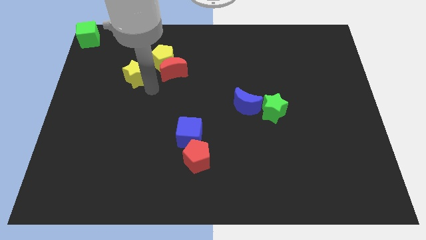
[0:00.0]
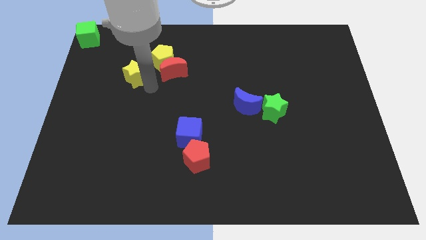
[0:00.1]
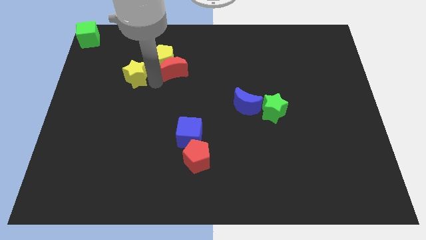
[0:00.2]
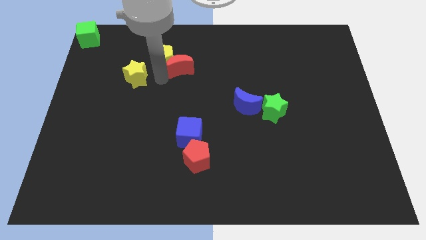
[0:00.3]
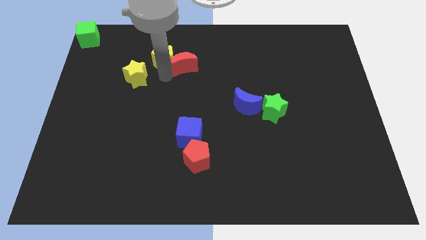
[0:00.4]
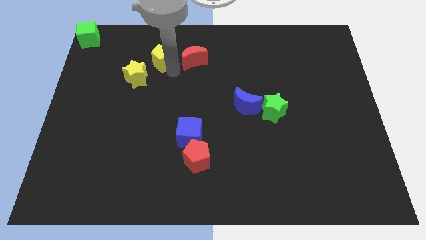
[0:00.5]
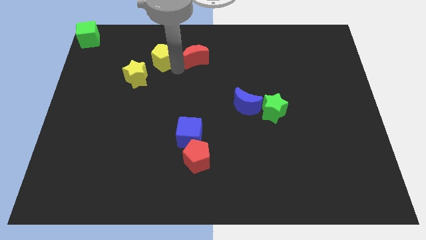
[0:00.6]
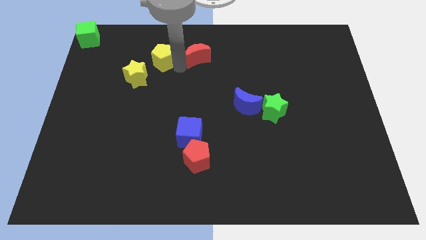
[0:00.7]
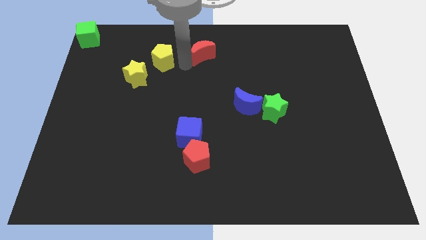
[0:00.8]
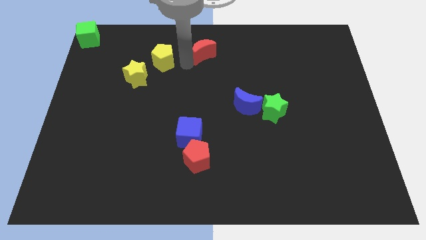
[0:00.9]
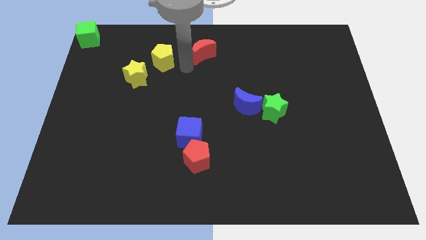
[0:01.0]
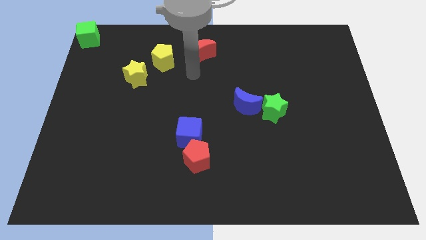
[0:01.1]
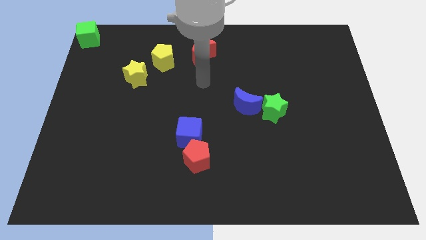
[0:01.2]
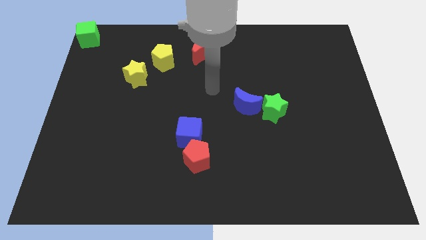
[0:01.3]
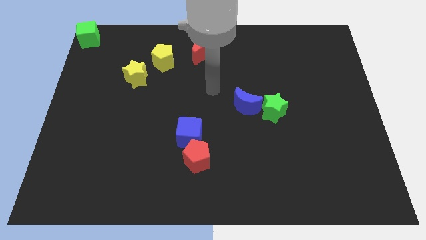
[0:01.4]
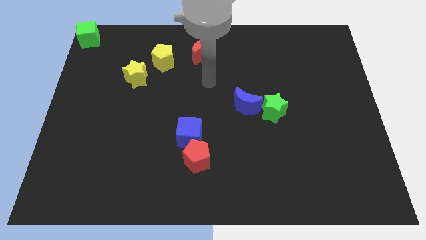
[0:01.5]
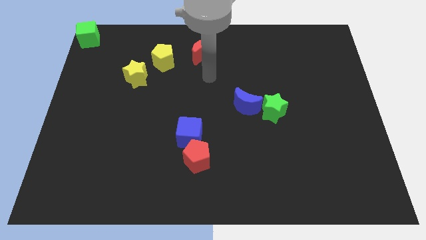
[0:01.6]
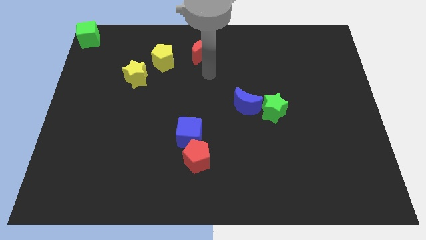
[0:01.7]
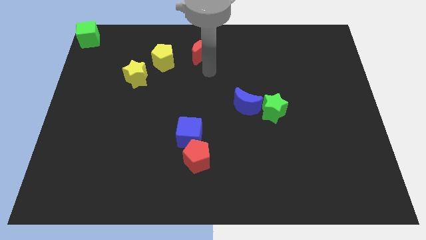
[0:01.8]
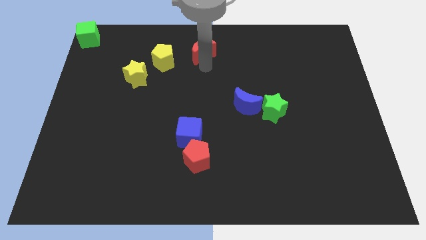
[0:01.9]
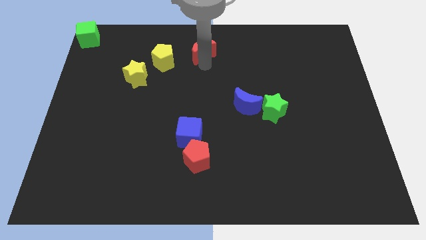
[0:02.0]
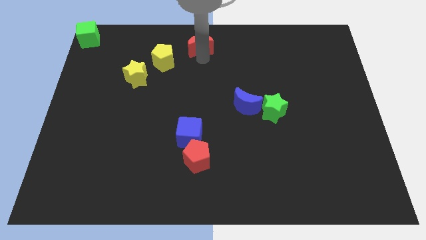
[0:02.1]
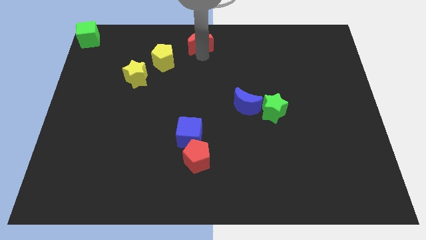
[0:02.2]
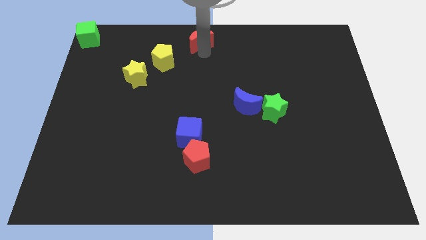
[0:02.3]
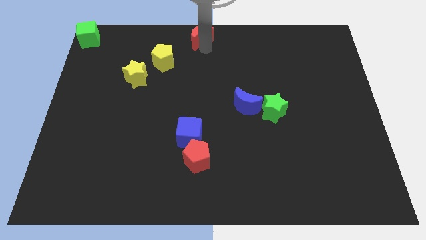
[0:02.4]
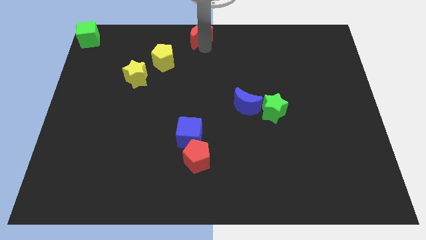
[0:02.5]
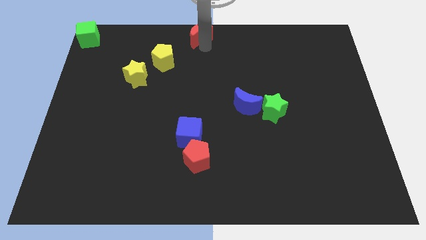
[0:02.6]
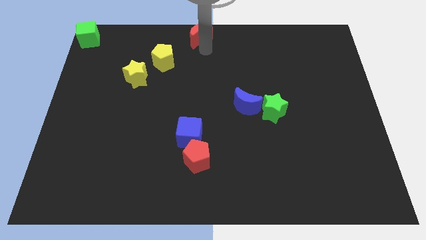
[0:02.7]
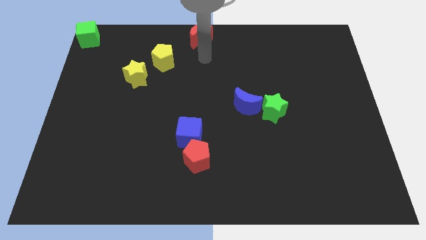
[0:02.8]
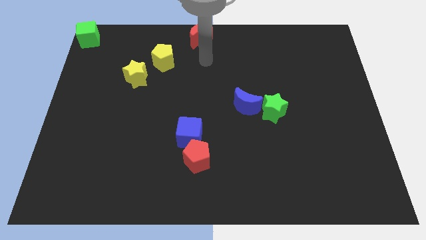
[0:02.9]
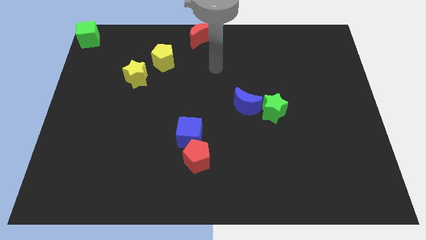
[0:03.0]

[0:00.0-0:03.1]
move the red moon to the middle top

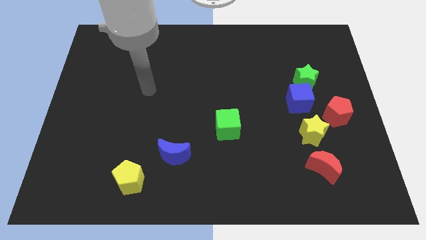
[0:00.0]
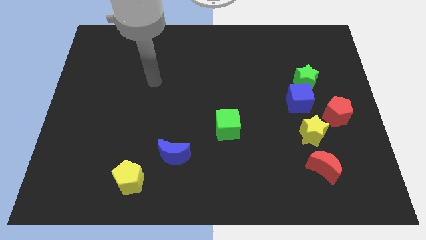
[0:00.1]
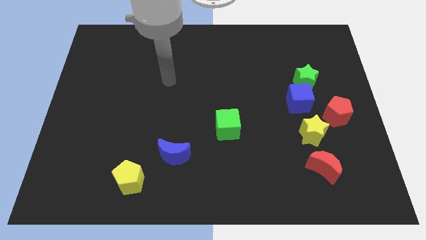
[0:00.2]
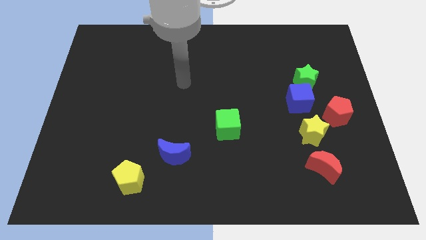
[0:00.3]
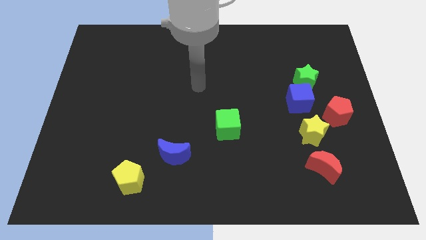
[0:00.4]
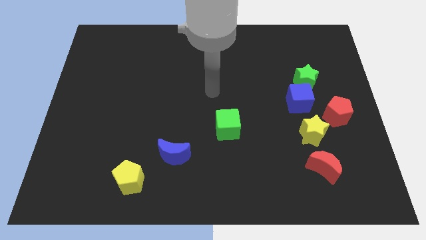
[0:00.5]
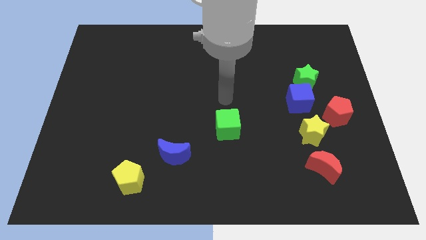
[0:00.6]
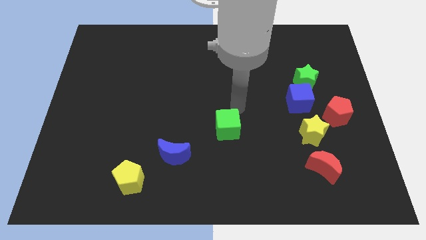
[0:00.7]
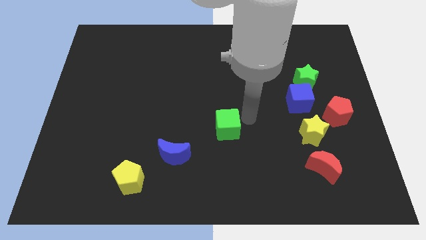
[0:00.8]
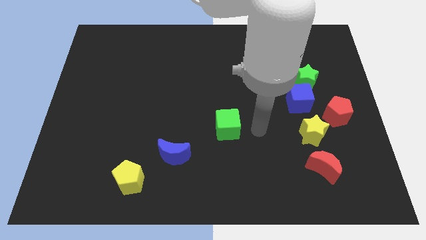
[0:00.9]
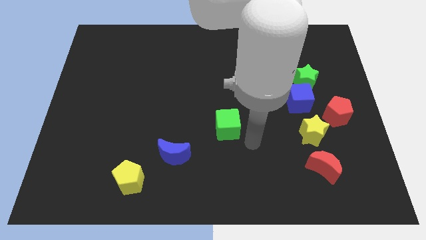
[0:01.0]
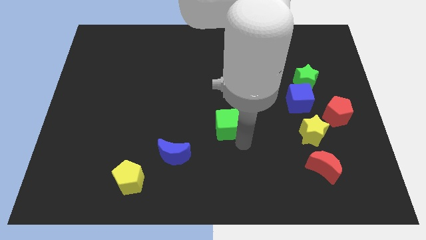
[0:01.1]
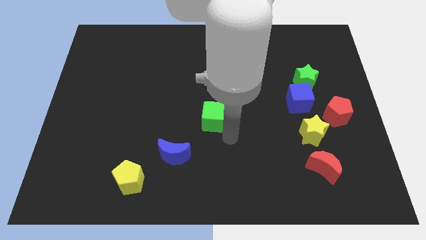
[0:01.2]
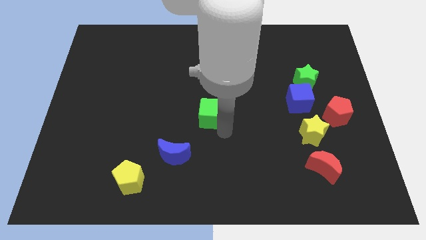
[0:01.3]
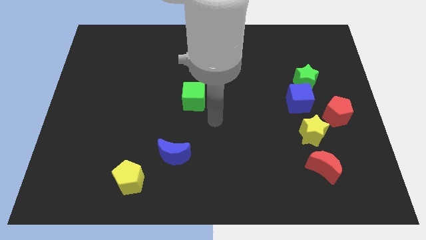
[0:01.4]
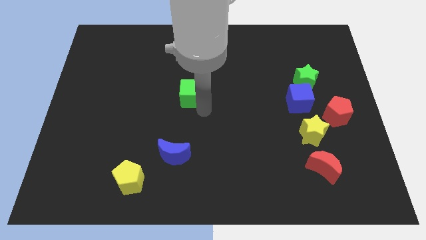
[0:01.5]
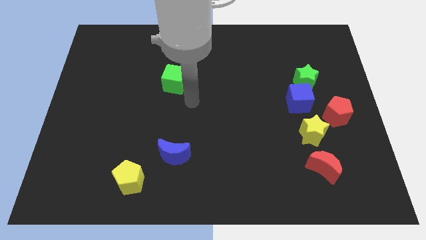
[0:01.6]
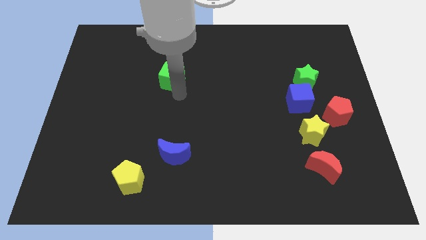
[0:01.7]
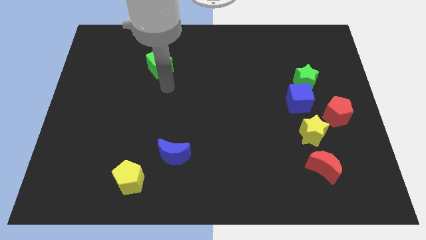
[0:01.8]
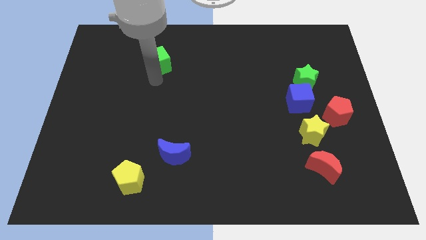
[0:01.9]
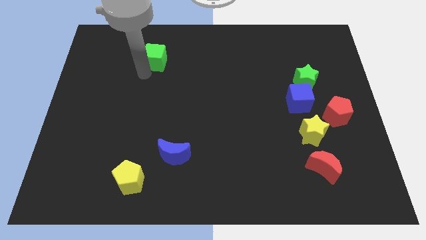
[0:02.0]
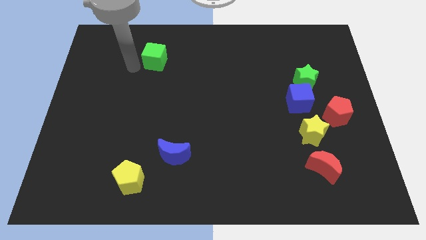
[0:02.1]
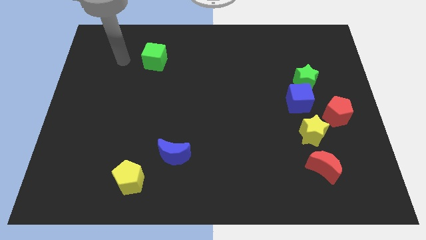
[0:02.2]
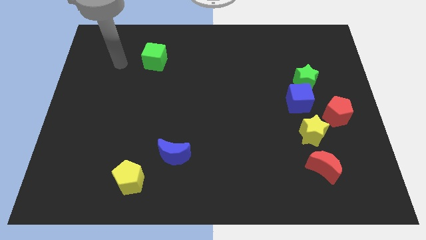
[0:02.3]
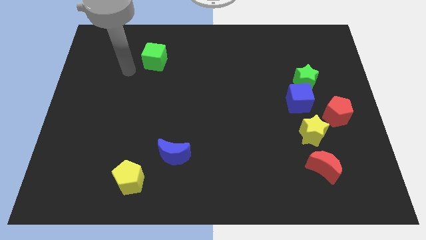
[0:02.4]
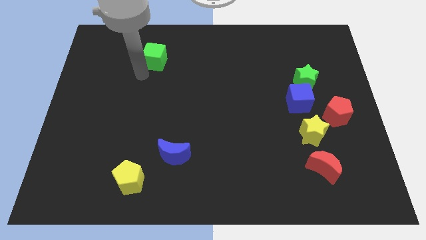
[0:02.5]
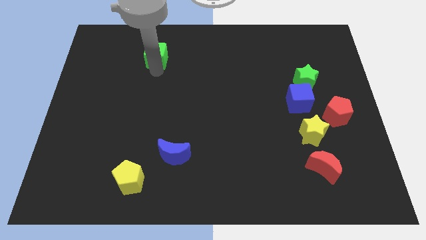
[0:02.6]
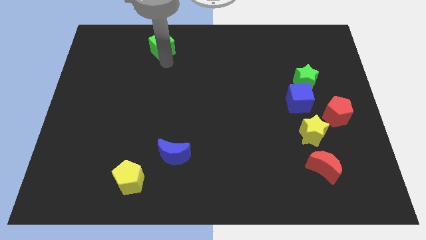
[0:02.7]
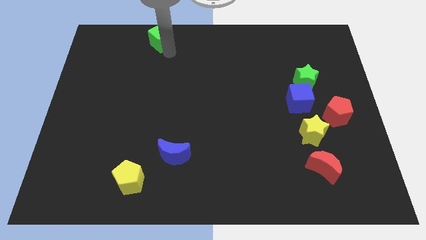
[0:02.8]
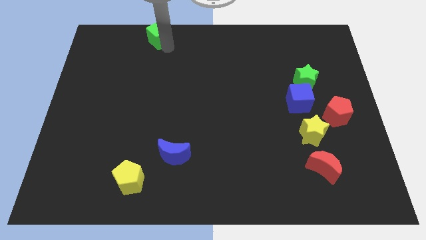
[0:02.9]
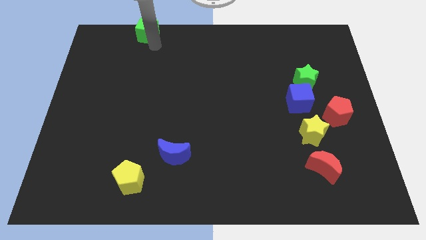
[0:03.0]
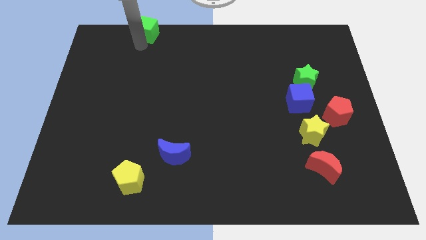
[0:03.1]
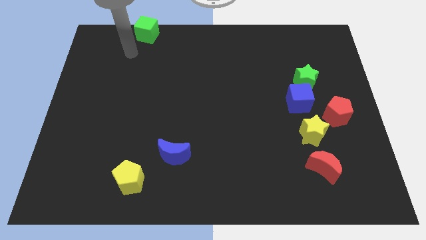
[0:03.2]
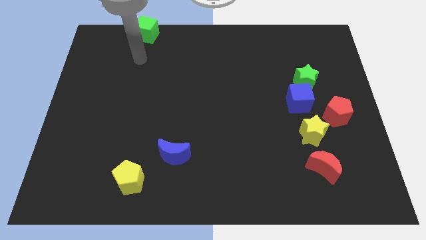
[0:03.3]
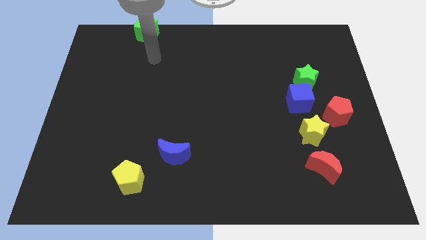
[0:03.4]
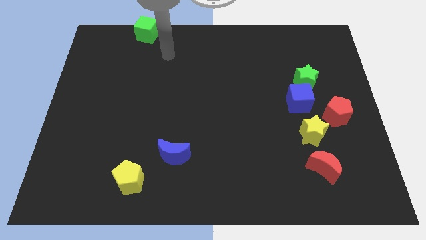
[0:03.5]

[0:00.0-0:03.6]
place the green cube at the top side of the yellow pentagon

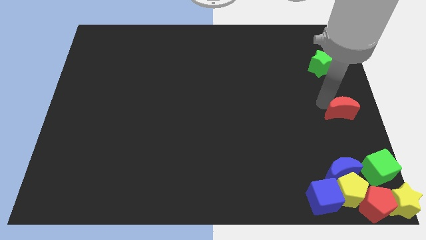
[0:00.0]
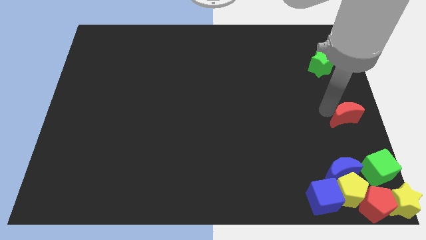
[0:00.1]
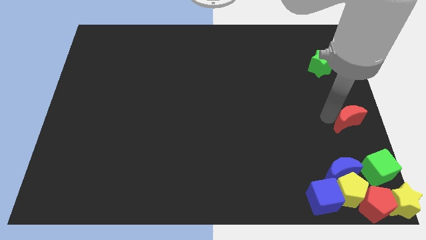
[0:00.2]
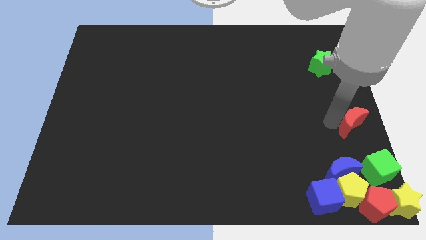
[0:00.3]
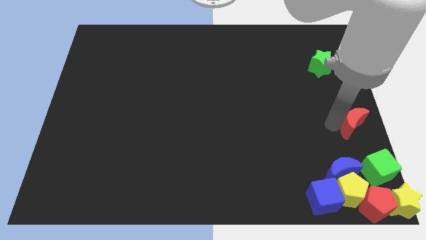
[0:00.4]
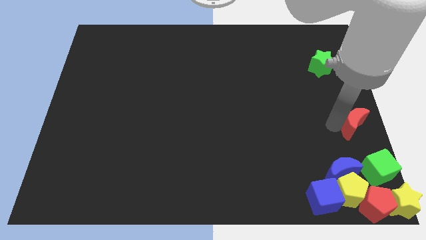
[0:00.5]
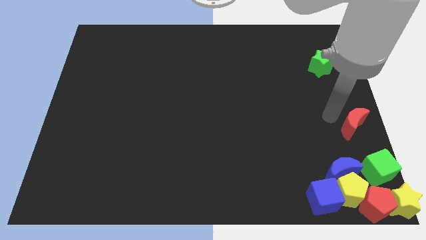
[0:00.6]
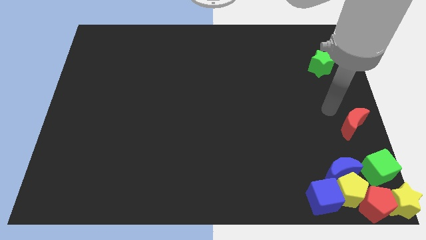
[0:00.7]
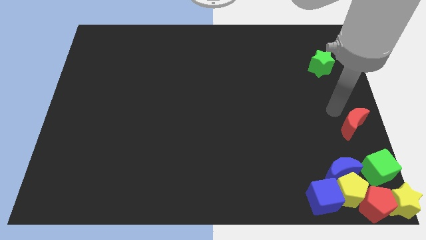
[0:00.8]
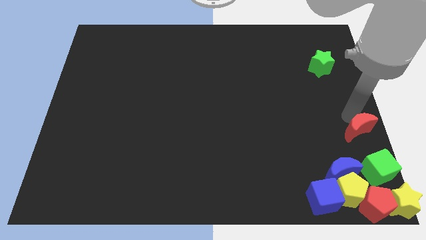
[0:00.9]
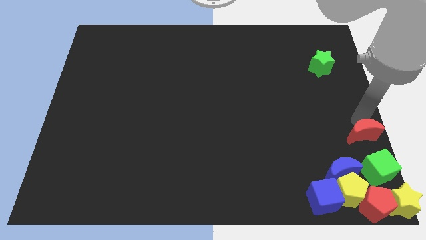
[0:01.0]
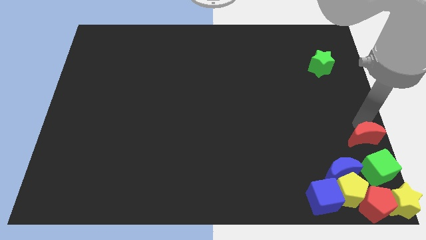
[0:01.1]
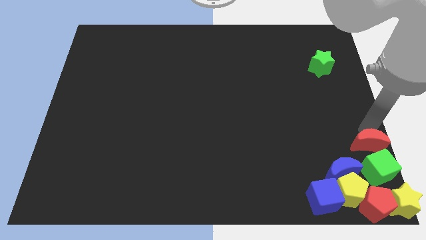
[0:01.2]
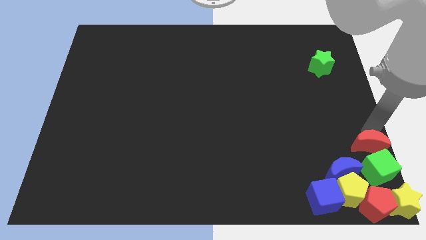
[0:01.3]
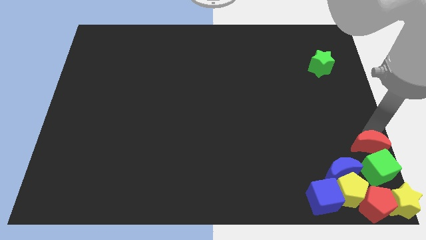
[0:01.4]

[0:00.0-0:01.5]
slide the red crescent close to the group of blocks

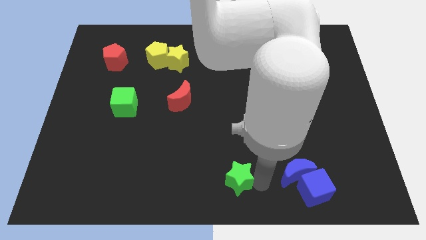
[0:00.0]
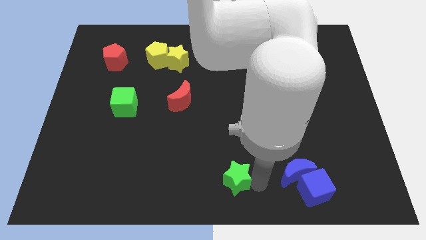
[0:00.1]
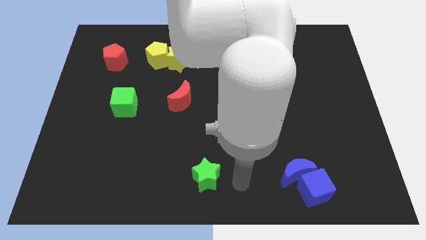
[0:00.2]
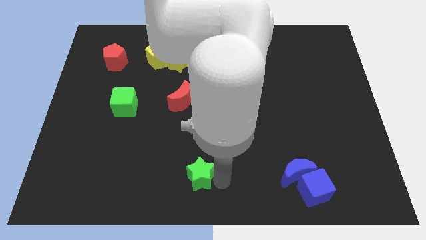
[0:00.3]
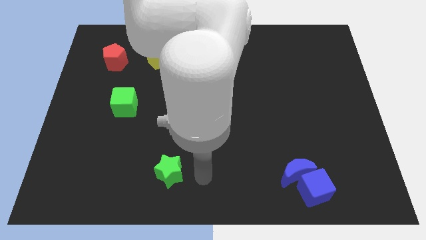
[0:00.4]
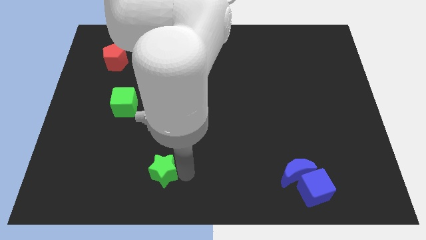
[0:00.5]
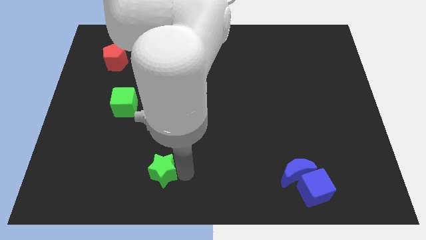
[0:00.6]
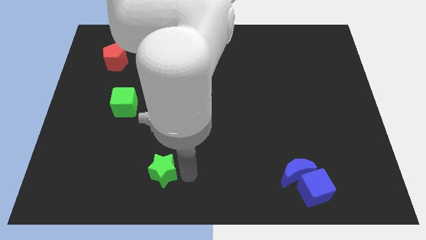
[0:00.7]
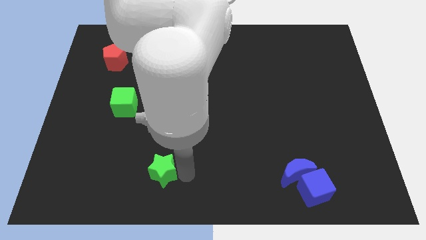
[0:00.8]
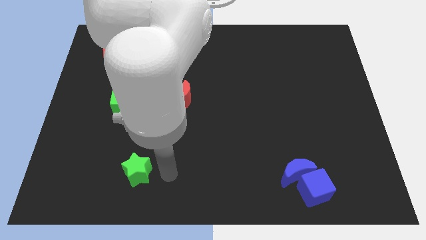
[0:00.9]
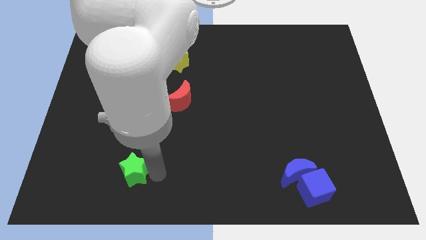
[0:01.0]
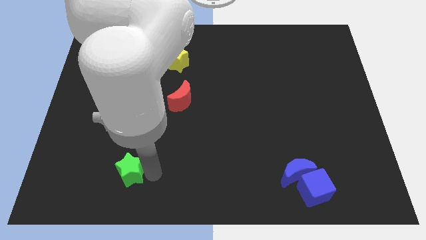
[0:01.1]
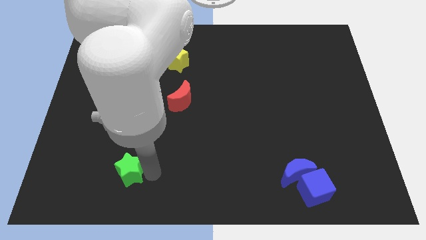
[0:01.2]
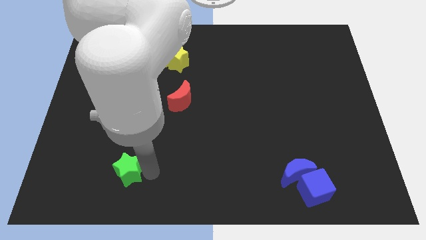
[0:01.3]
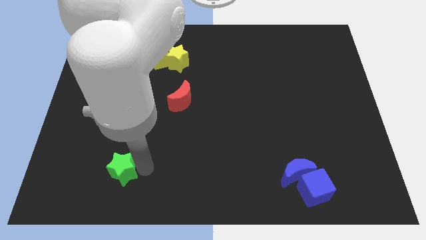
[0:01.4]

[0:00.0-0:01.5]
move the green star underneath the green cube
